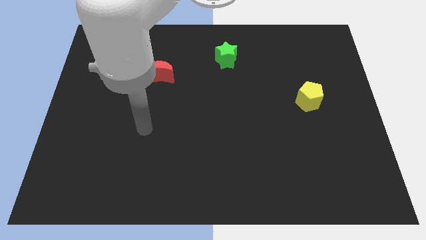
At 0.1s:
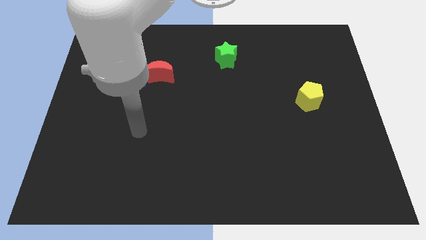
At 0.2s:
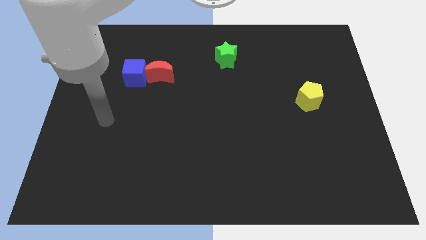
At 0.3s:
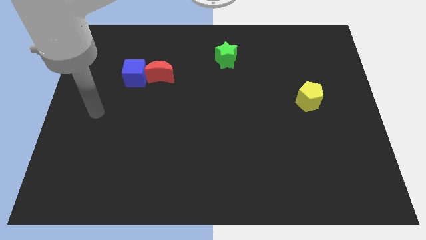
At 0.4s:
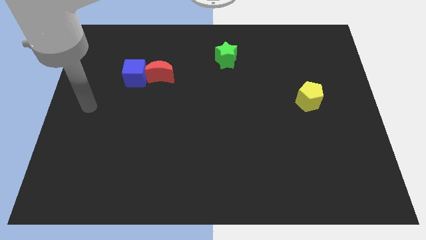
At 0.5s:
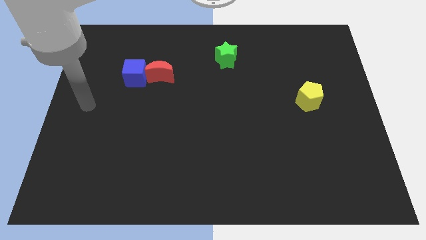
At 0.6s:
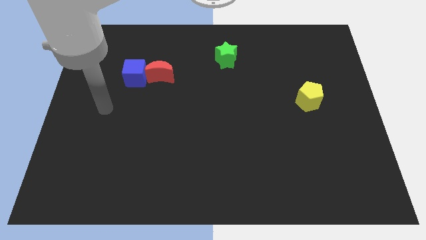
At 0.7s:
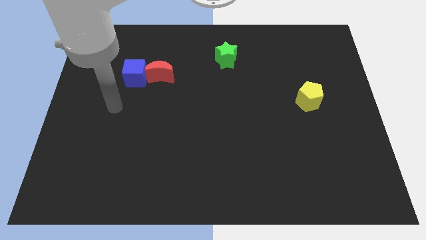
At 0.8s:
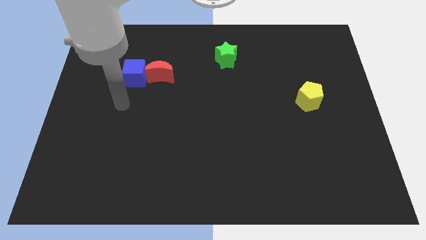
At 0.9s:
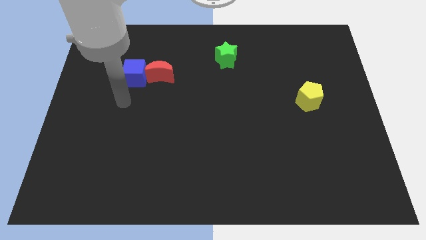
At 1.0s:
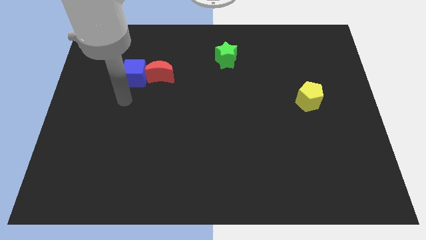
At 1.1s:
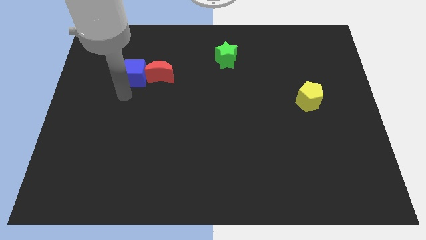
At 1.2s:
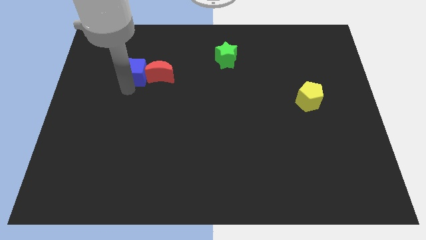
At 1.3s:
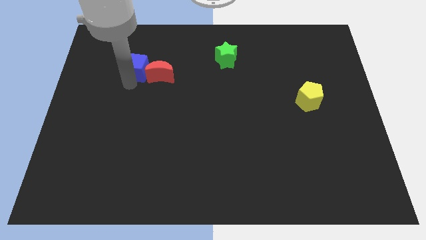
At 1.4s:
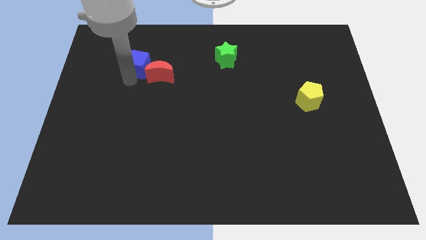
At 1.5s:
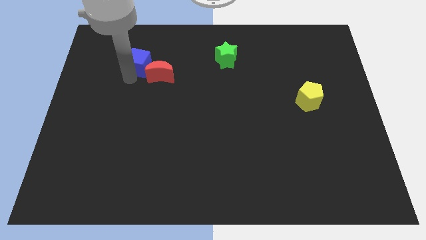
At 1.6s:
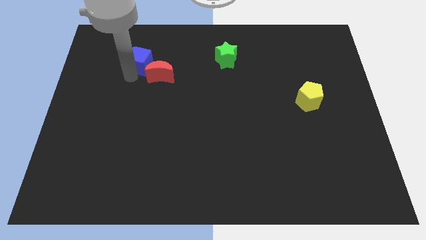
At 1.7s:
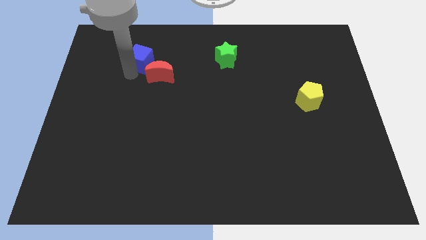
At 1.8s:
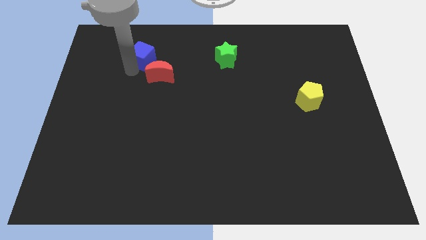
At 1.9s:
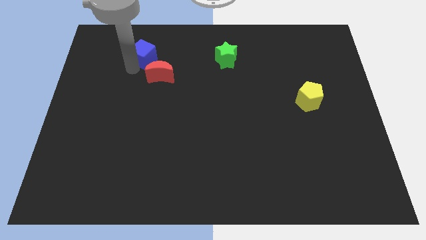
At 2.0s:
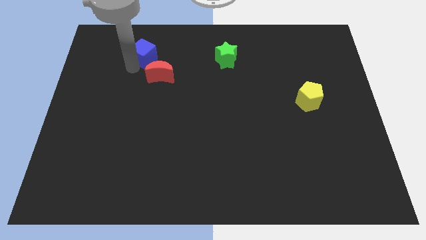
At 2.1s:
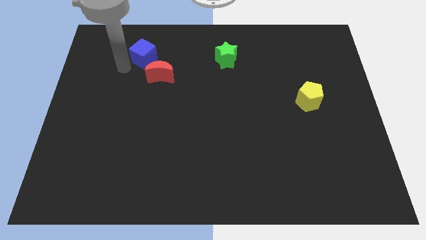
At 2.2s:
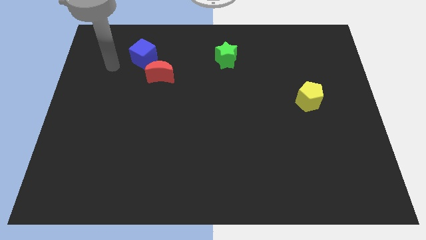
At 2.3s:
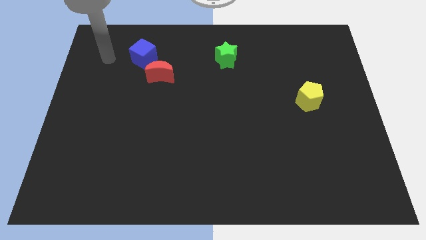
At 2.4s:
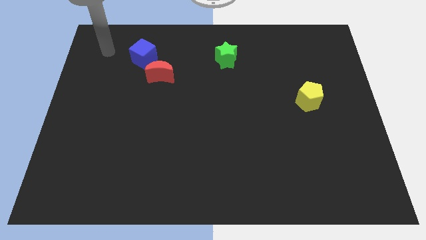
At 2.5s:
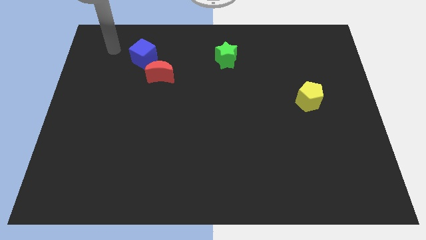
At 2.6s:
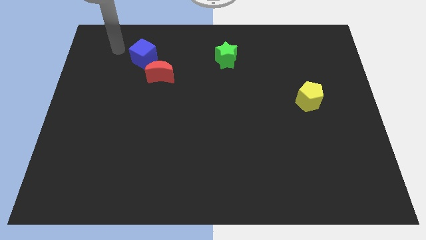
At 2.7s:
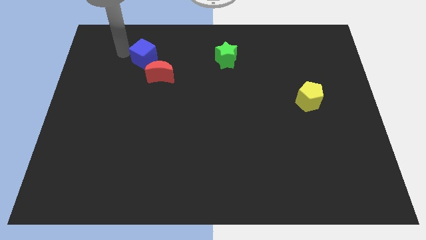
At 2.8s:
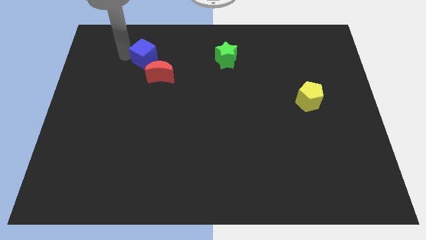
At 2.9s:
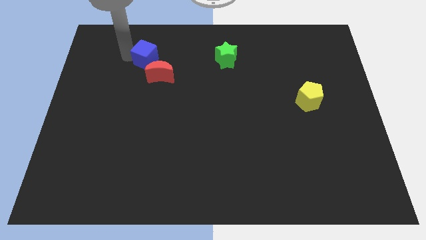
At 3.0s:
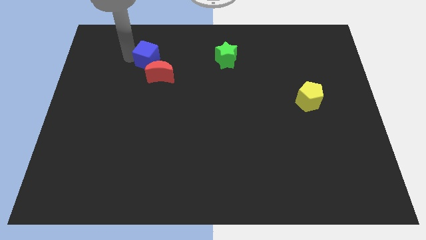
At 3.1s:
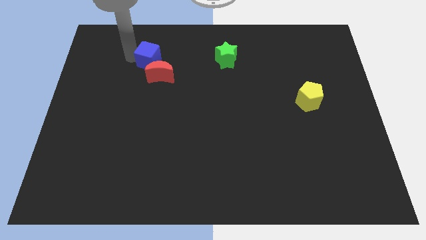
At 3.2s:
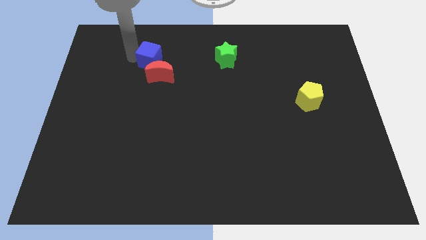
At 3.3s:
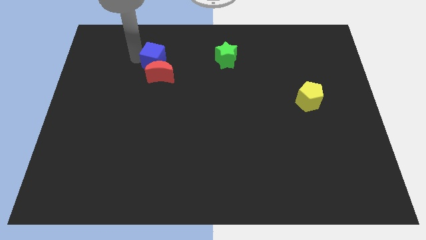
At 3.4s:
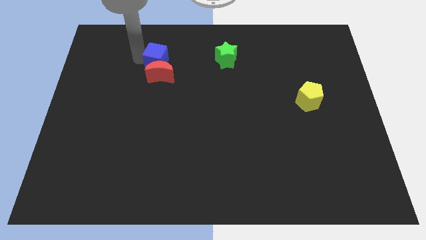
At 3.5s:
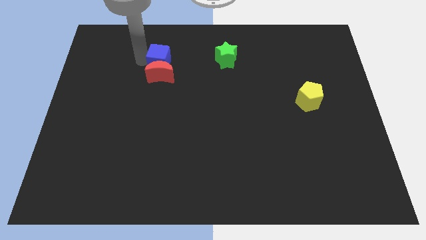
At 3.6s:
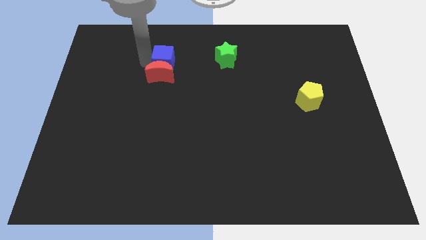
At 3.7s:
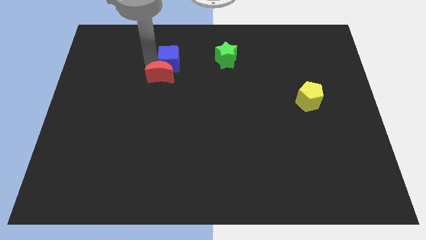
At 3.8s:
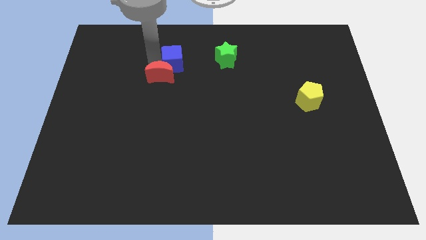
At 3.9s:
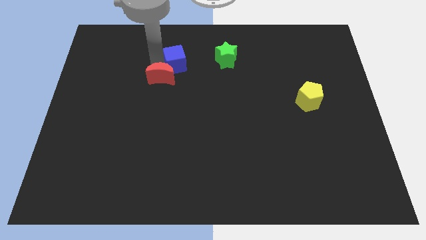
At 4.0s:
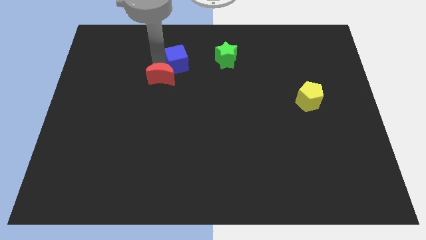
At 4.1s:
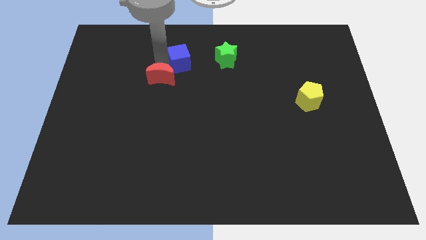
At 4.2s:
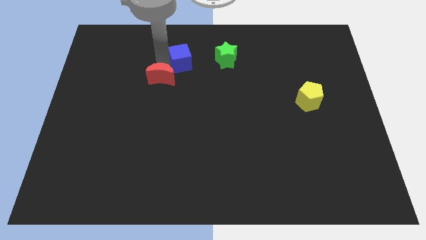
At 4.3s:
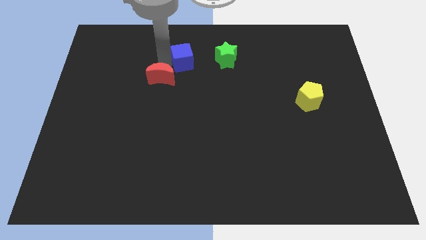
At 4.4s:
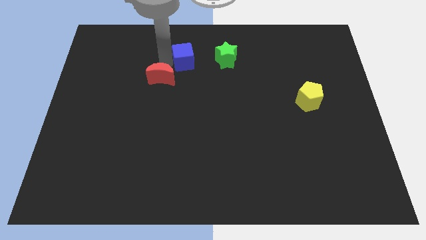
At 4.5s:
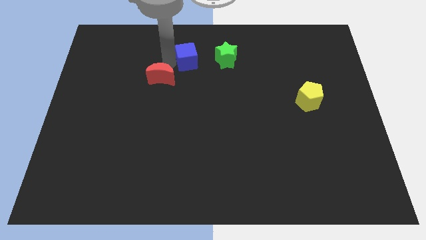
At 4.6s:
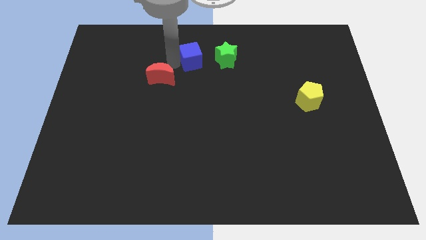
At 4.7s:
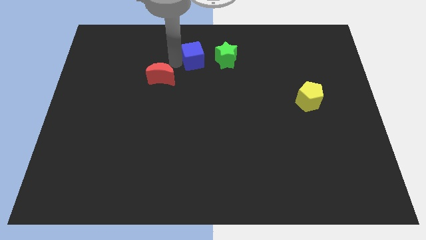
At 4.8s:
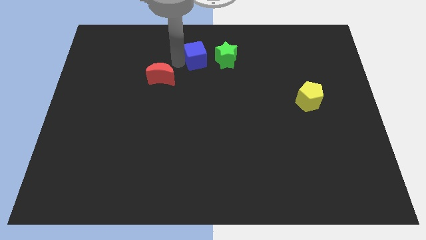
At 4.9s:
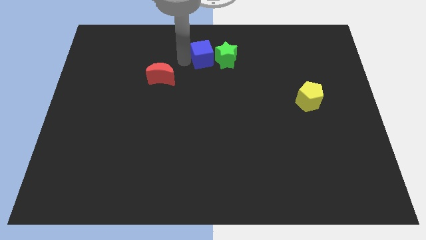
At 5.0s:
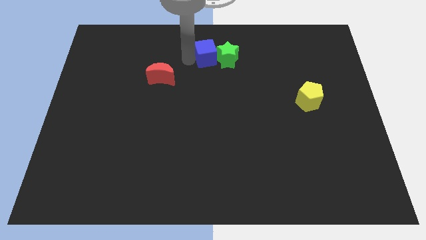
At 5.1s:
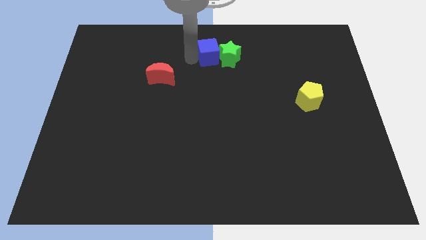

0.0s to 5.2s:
push the blue cube towards the green star

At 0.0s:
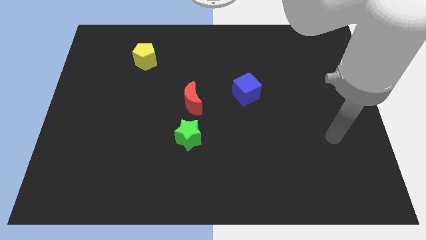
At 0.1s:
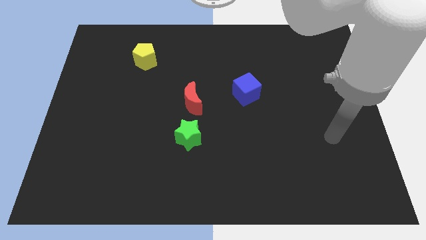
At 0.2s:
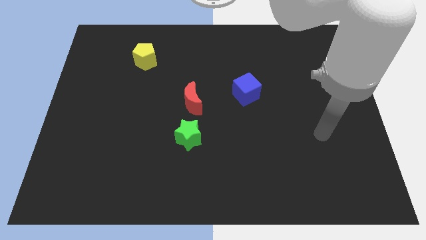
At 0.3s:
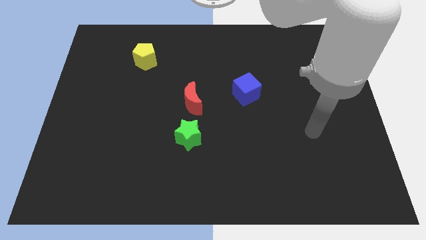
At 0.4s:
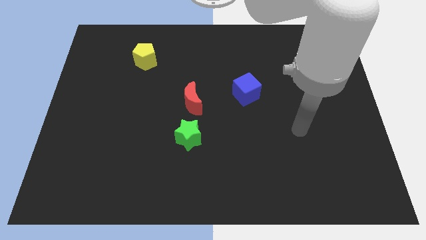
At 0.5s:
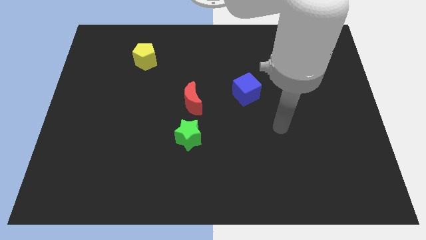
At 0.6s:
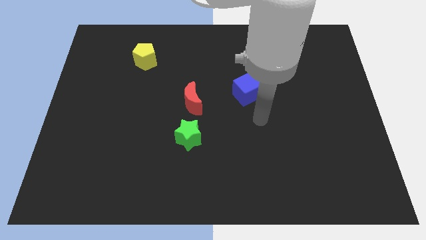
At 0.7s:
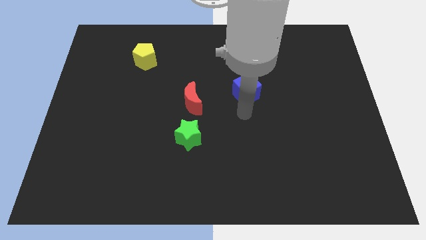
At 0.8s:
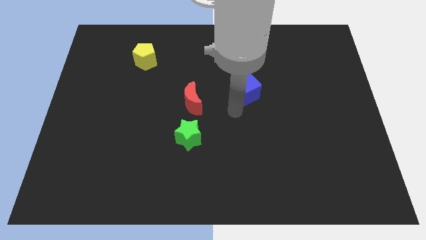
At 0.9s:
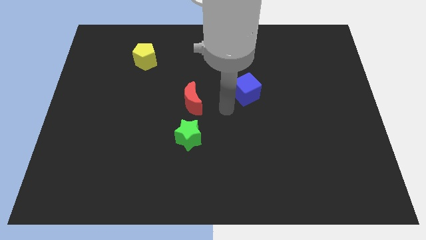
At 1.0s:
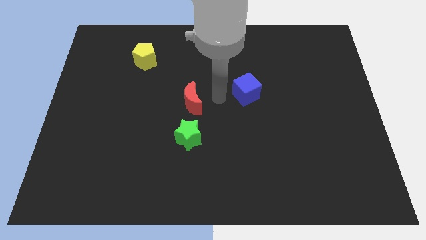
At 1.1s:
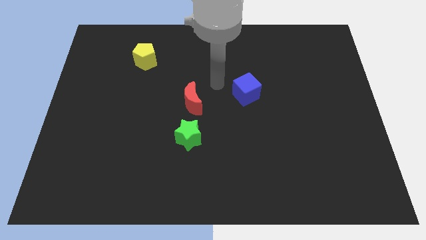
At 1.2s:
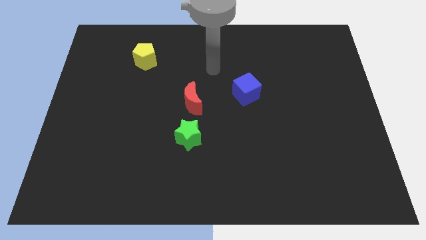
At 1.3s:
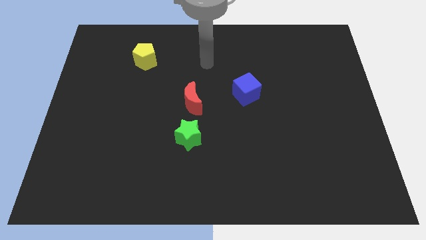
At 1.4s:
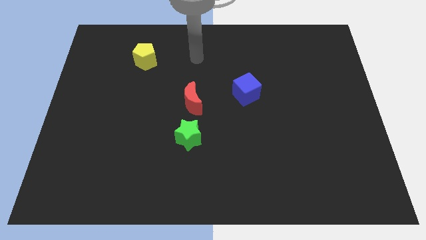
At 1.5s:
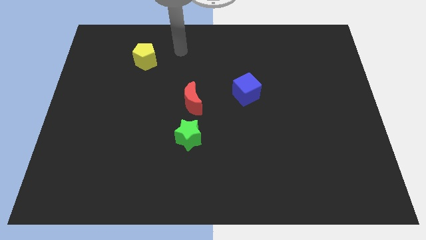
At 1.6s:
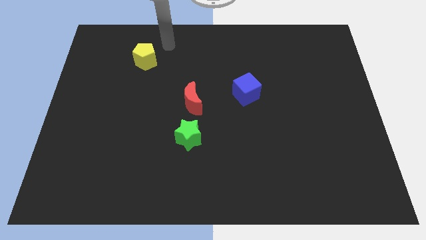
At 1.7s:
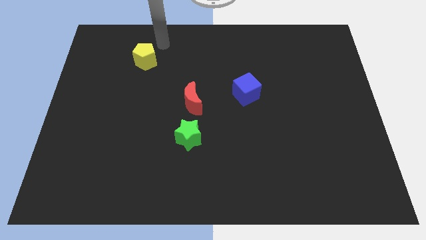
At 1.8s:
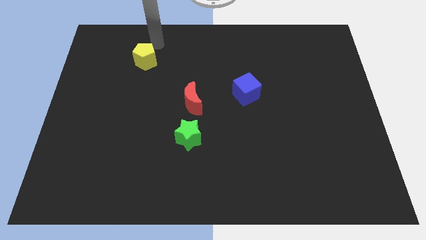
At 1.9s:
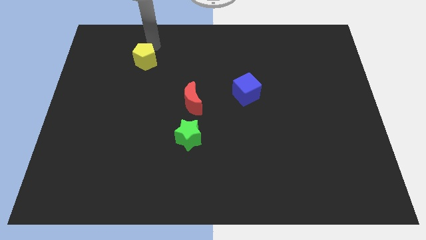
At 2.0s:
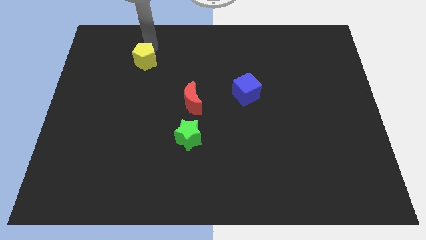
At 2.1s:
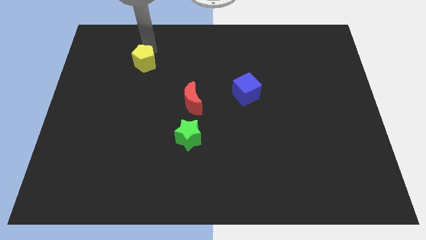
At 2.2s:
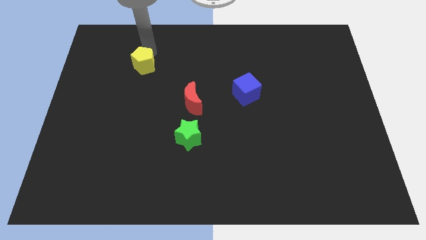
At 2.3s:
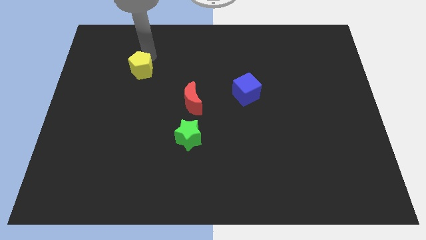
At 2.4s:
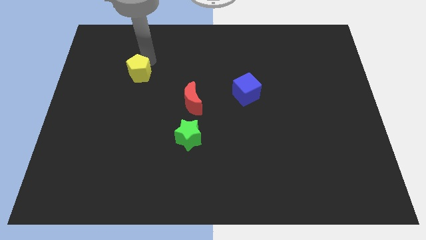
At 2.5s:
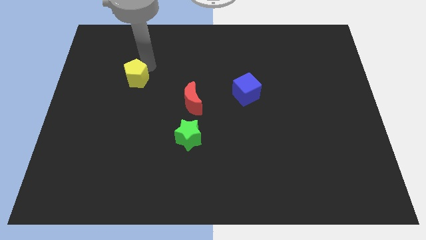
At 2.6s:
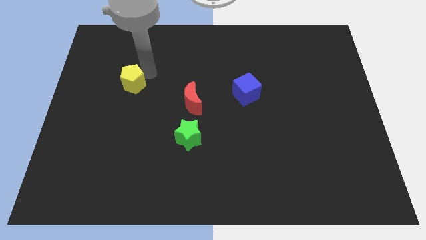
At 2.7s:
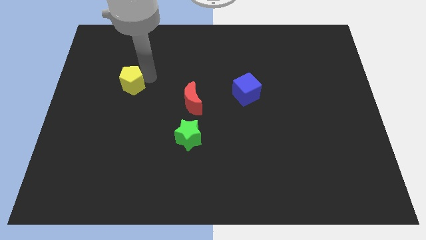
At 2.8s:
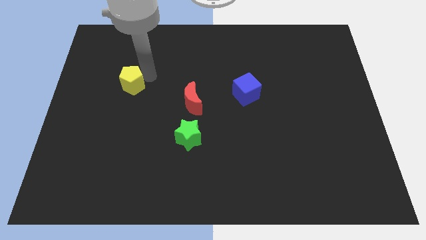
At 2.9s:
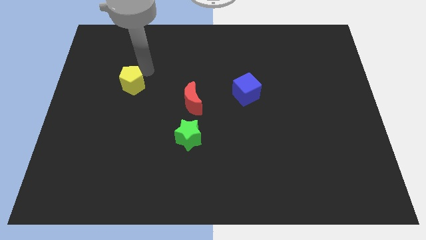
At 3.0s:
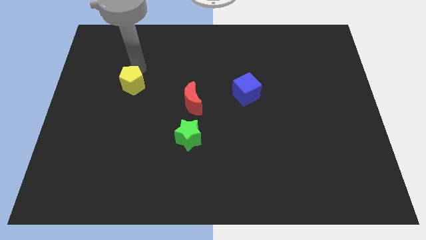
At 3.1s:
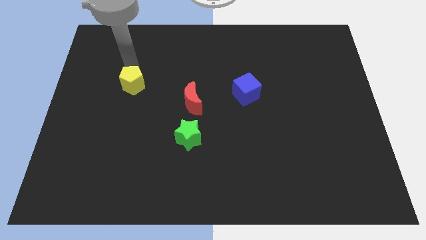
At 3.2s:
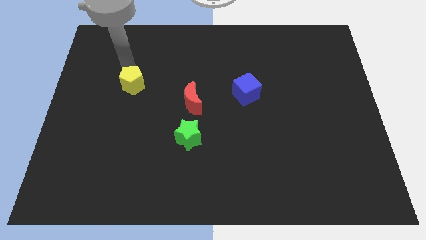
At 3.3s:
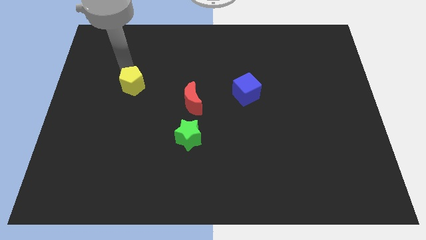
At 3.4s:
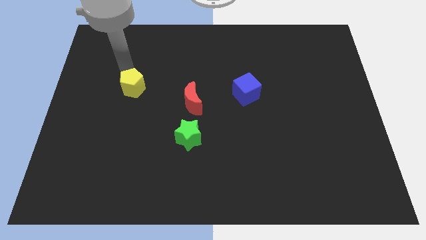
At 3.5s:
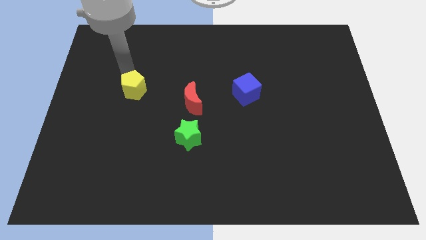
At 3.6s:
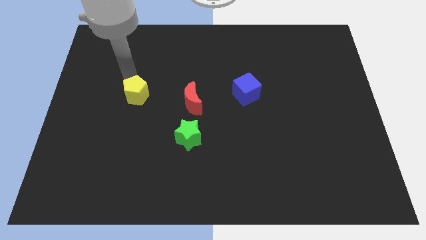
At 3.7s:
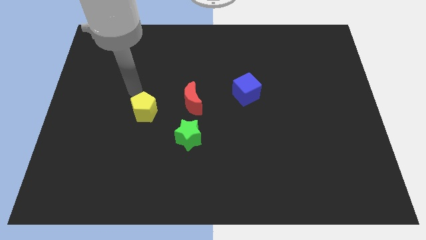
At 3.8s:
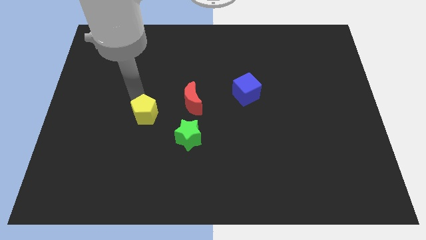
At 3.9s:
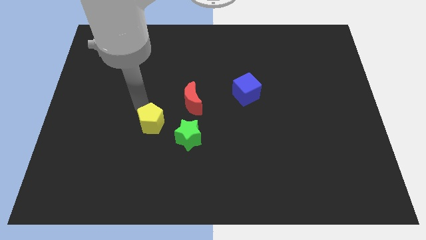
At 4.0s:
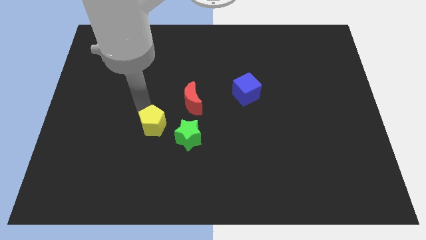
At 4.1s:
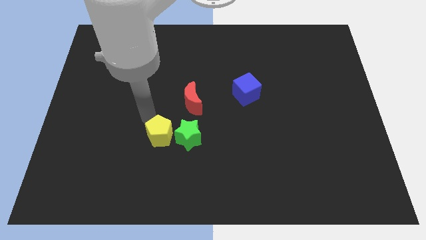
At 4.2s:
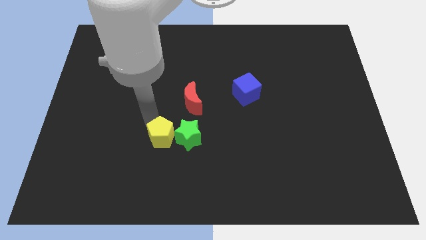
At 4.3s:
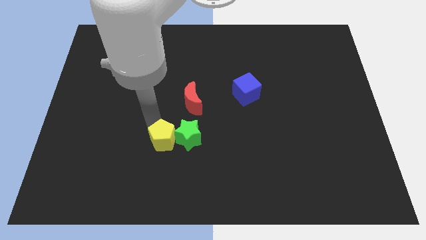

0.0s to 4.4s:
slide the pentagon to the star
